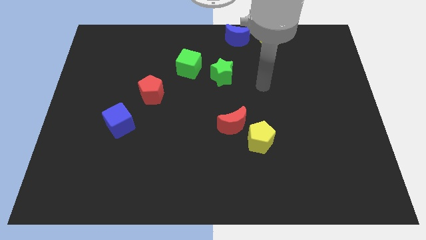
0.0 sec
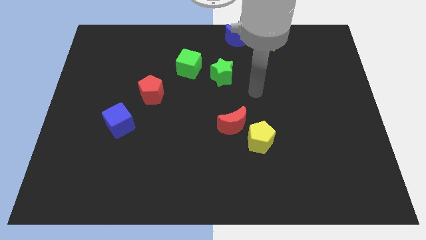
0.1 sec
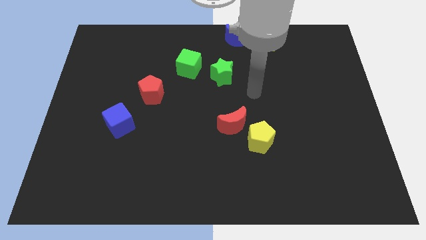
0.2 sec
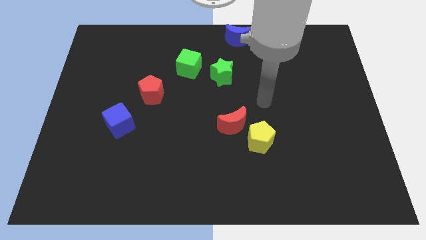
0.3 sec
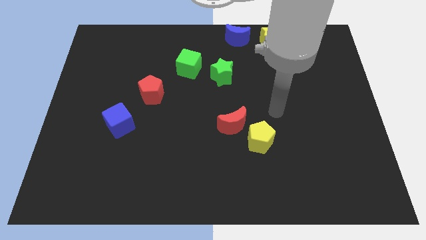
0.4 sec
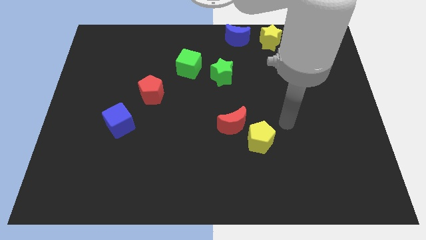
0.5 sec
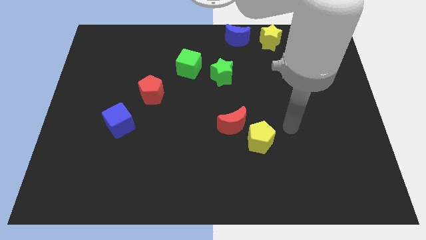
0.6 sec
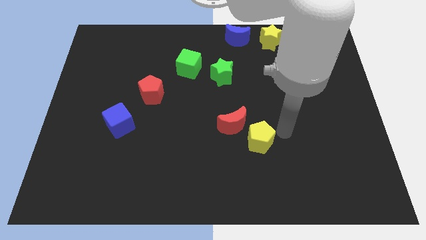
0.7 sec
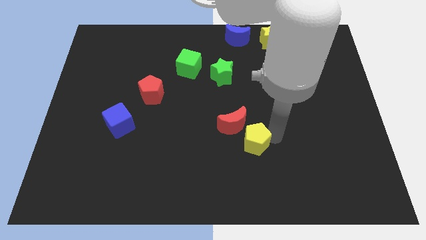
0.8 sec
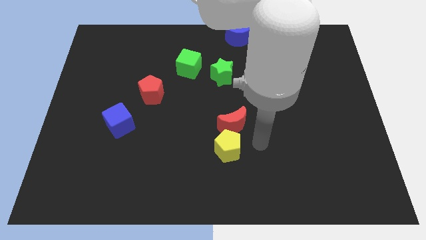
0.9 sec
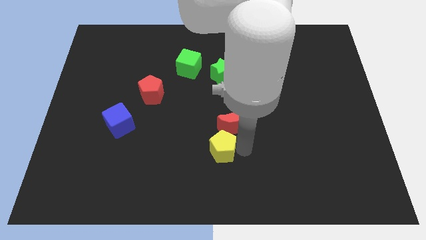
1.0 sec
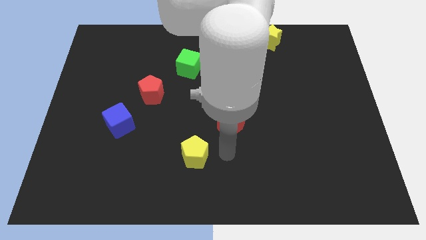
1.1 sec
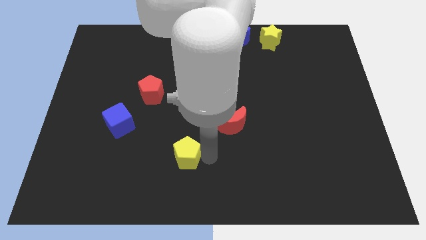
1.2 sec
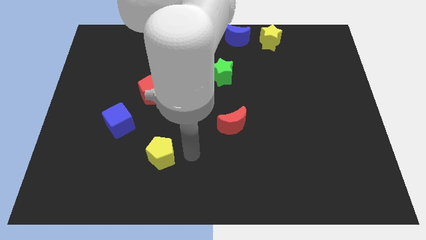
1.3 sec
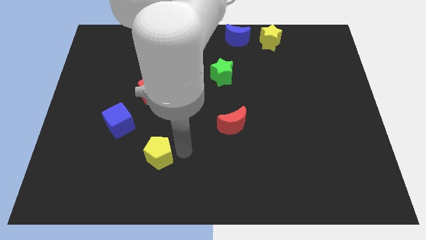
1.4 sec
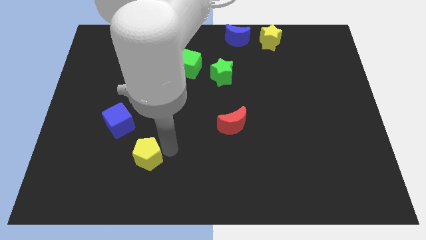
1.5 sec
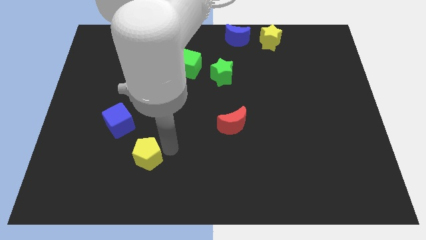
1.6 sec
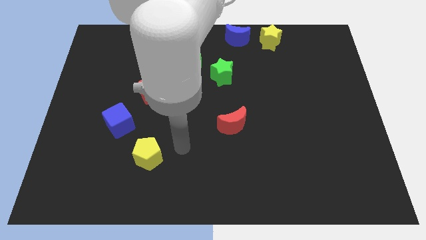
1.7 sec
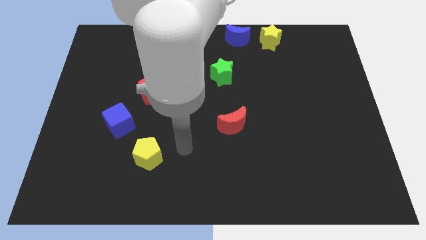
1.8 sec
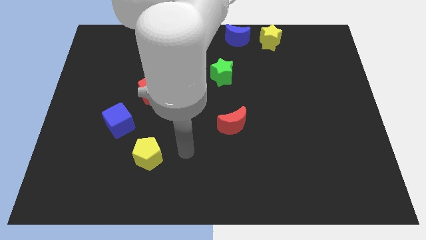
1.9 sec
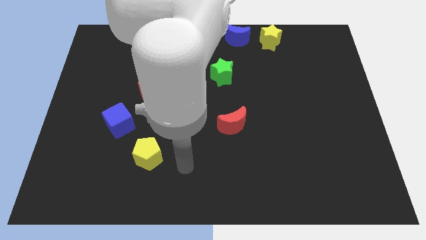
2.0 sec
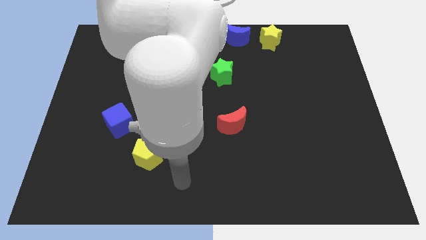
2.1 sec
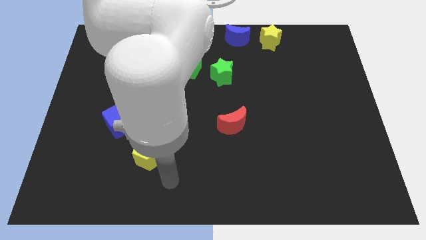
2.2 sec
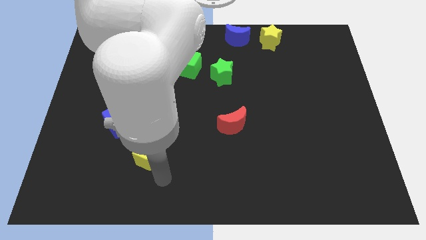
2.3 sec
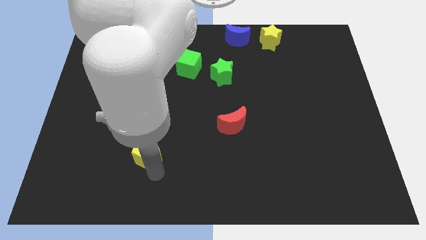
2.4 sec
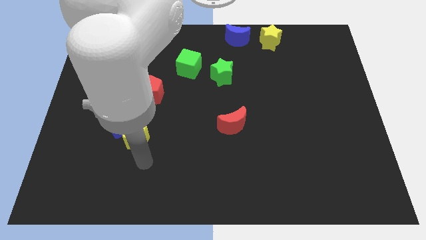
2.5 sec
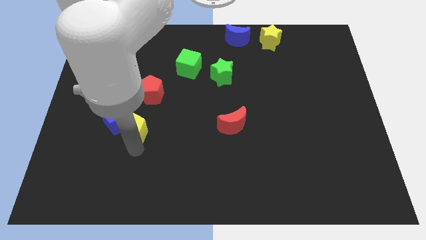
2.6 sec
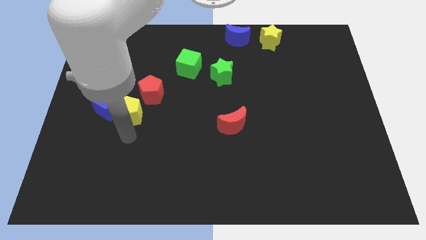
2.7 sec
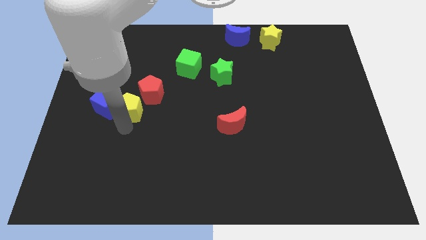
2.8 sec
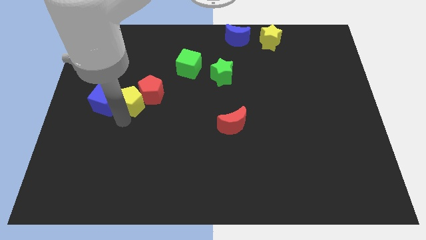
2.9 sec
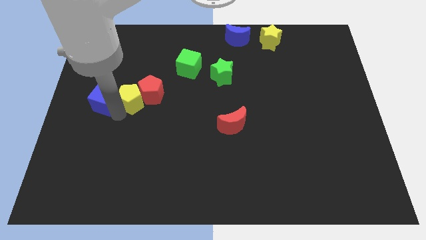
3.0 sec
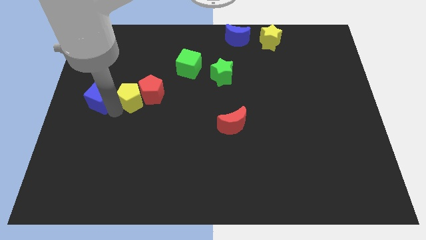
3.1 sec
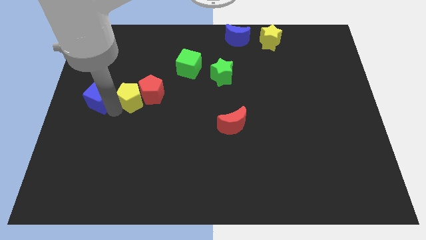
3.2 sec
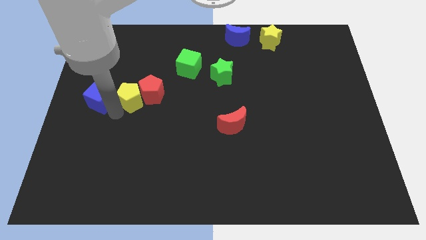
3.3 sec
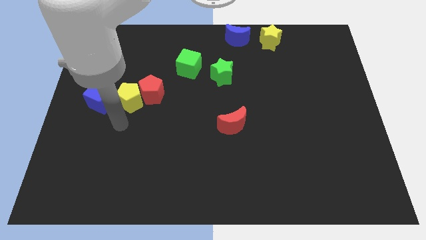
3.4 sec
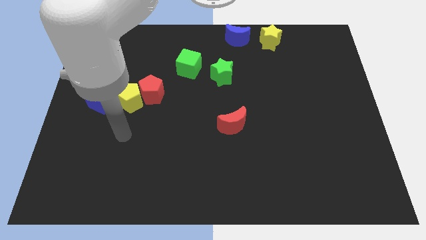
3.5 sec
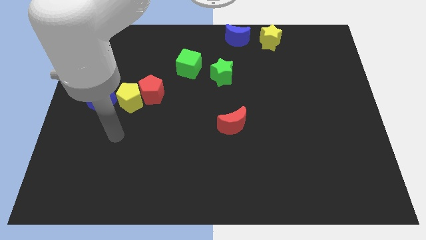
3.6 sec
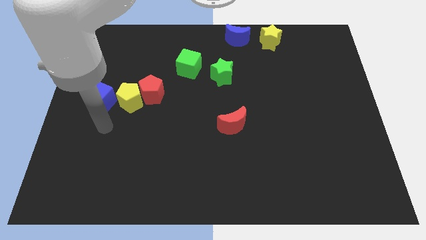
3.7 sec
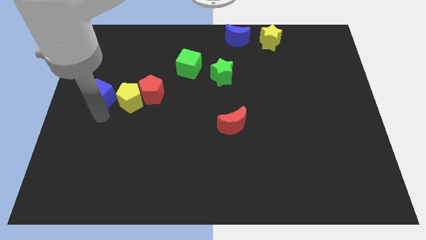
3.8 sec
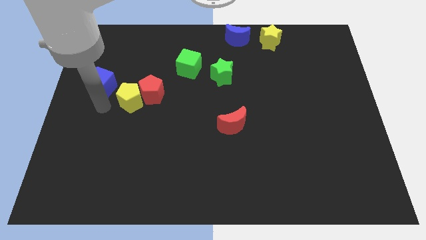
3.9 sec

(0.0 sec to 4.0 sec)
push the yellow pentagon into the blue cube

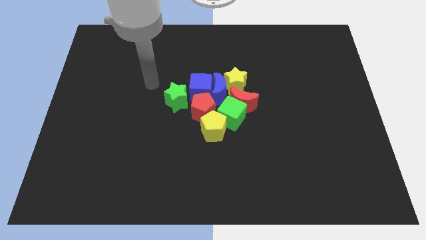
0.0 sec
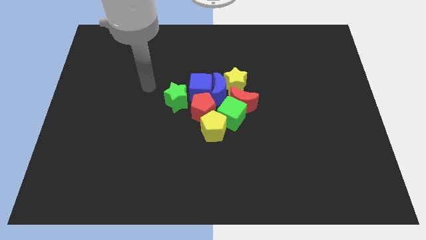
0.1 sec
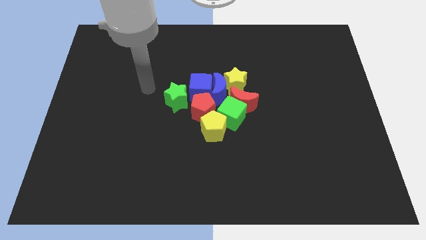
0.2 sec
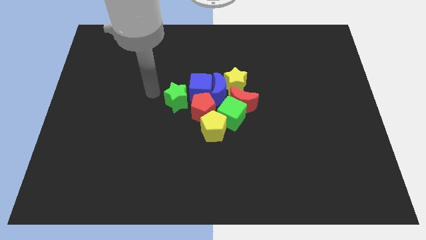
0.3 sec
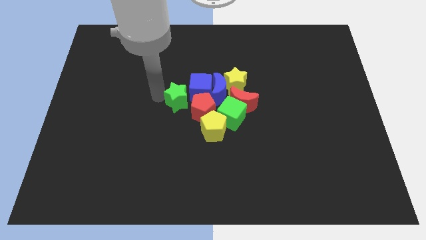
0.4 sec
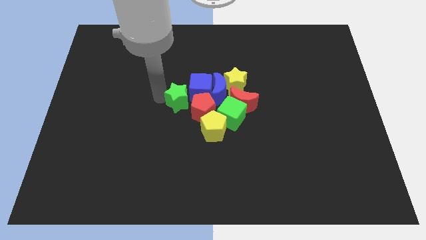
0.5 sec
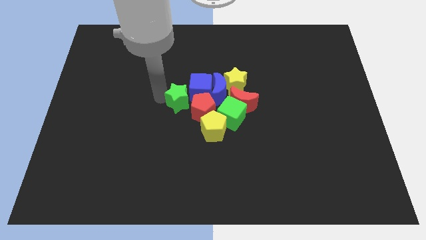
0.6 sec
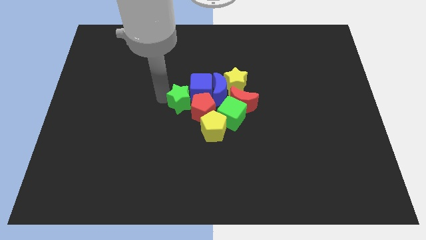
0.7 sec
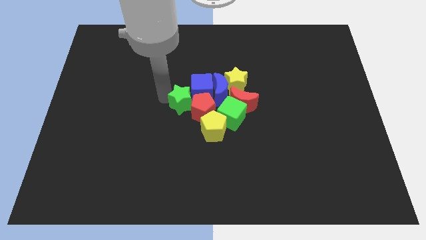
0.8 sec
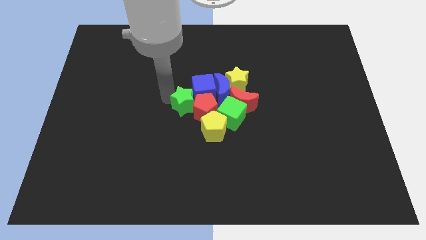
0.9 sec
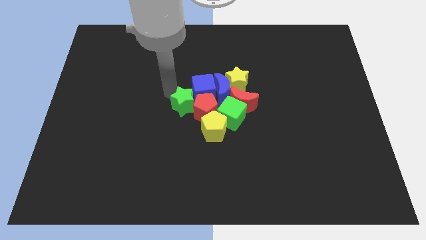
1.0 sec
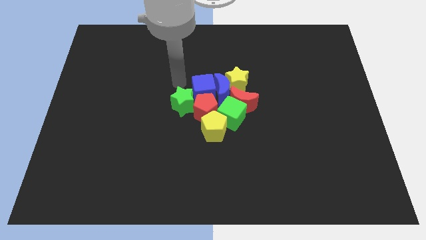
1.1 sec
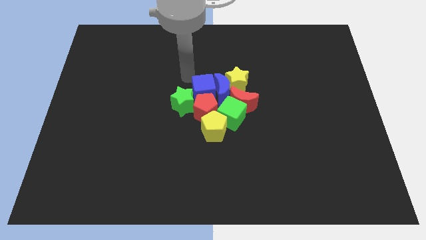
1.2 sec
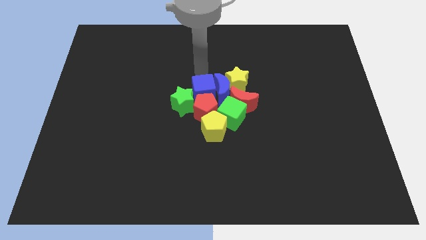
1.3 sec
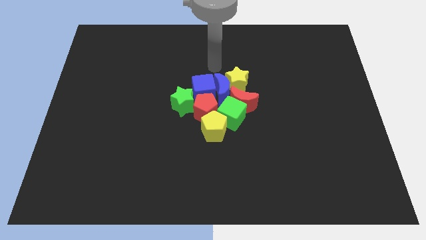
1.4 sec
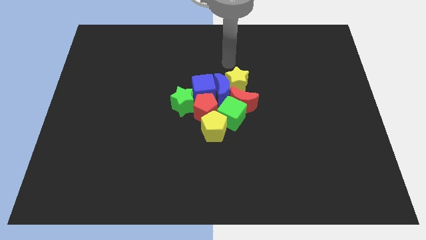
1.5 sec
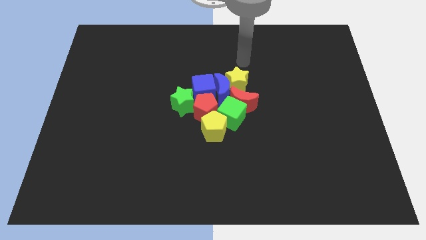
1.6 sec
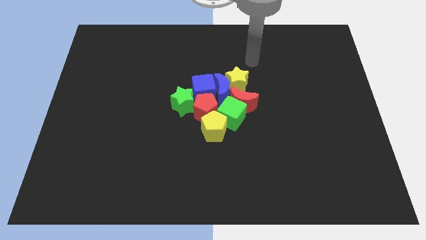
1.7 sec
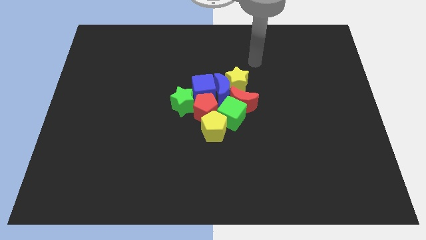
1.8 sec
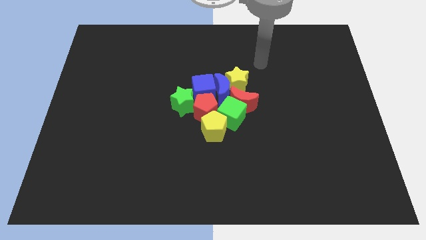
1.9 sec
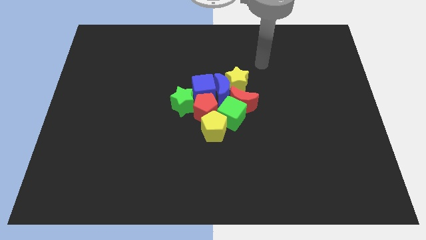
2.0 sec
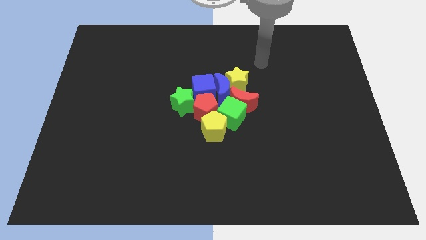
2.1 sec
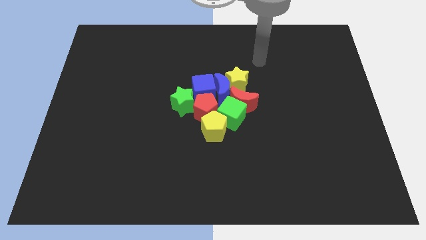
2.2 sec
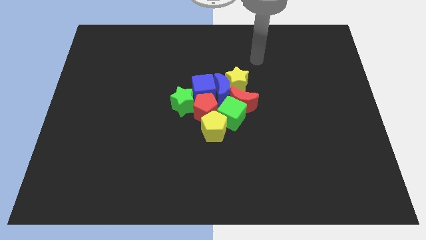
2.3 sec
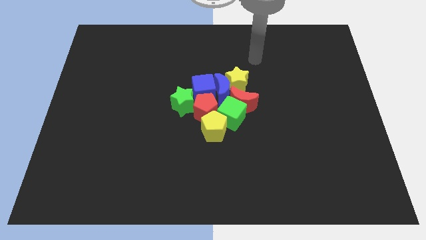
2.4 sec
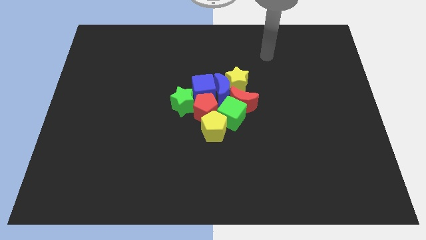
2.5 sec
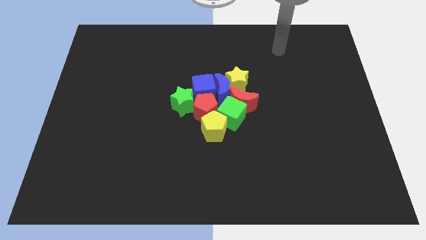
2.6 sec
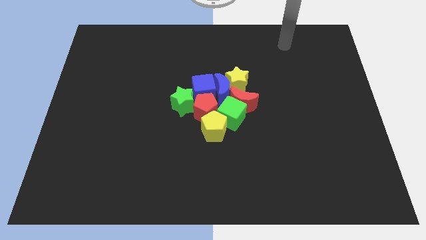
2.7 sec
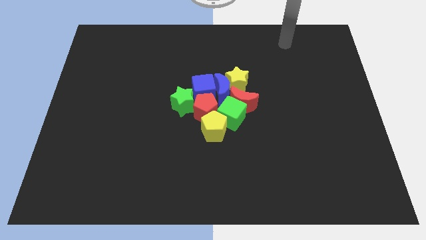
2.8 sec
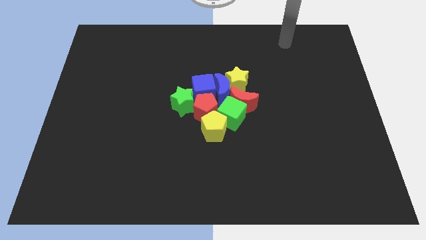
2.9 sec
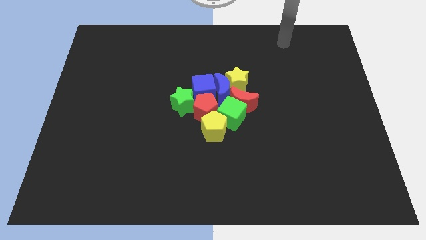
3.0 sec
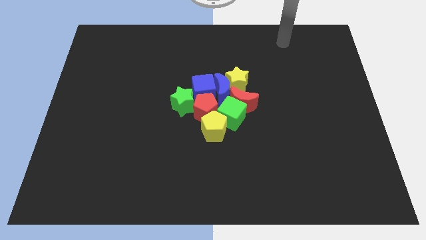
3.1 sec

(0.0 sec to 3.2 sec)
move your arm to the top right

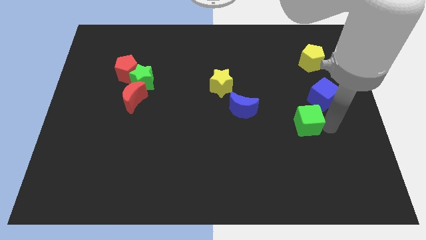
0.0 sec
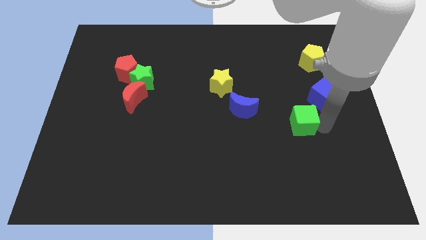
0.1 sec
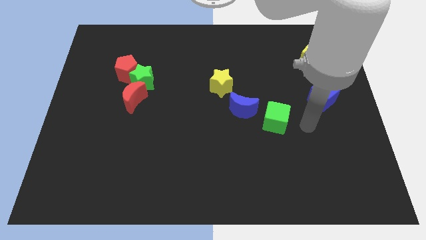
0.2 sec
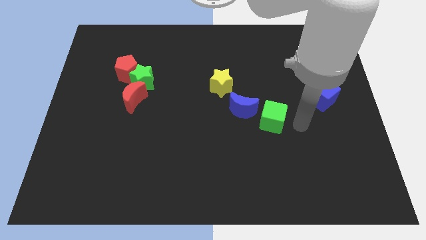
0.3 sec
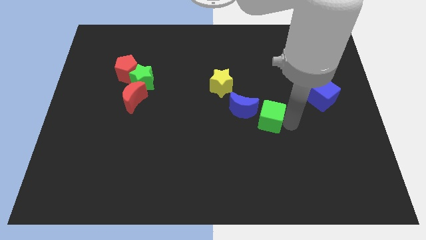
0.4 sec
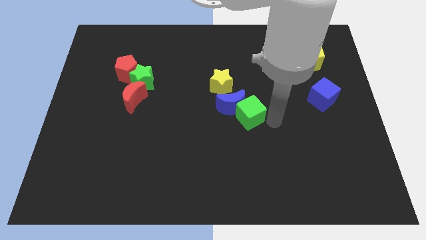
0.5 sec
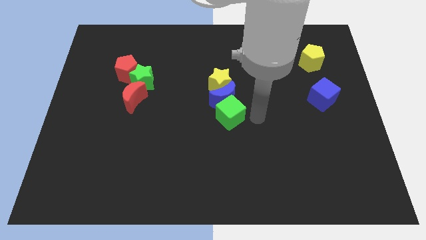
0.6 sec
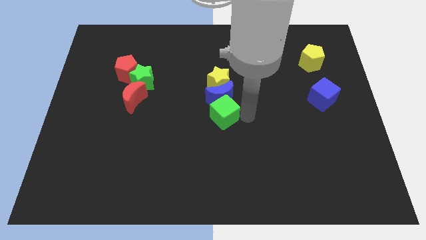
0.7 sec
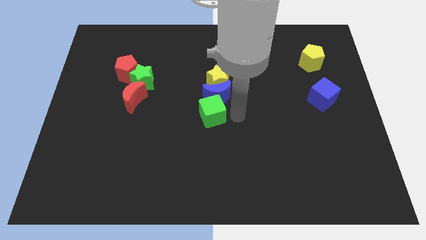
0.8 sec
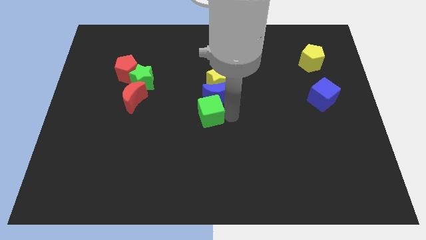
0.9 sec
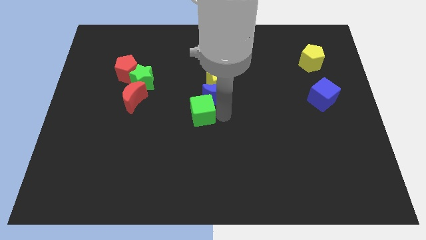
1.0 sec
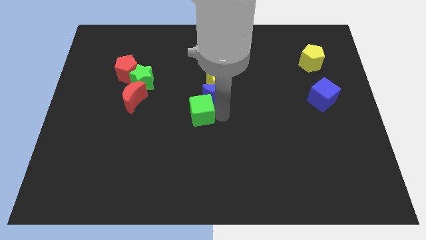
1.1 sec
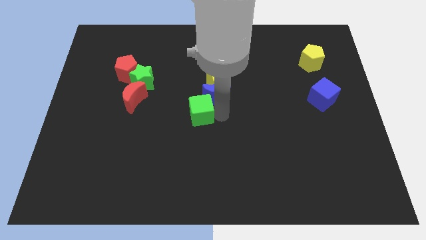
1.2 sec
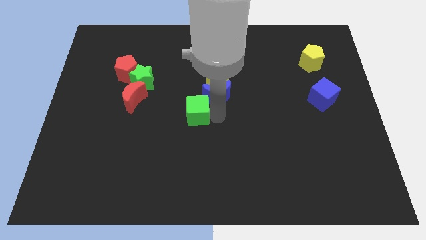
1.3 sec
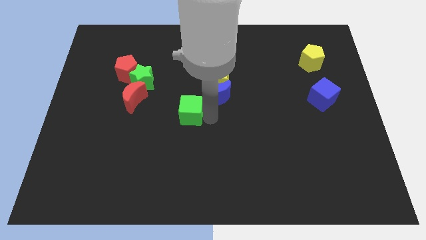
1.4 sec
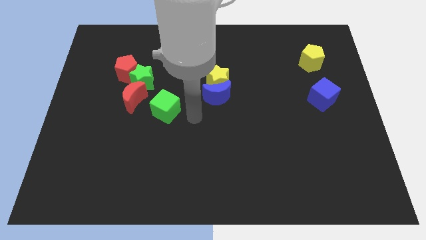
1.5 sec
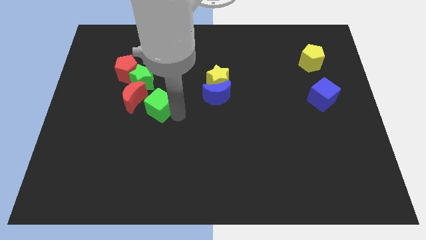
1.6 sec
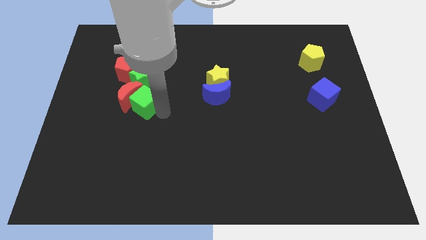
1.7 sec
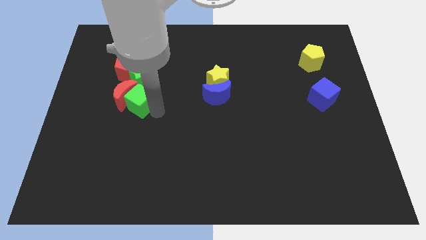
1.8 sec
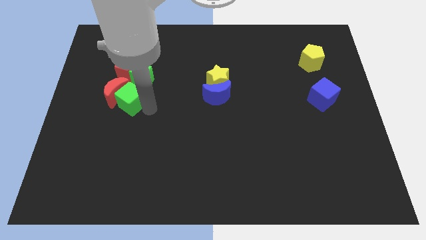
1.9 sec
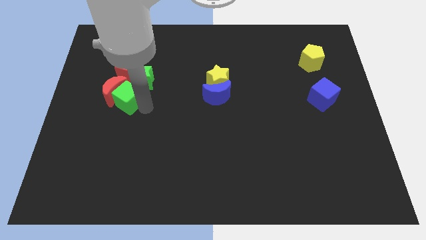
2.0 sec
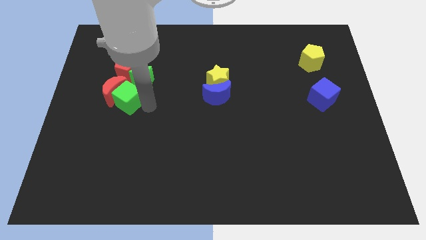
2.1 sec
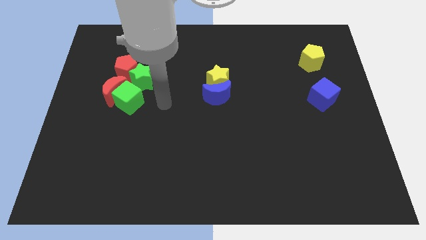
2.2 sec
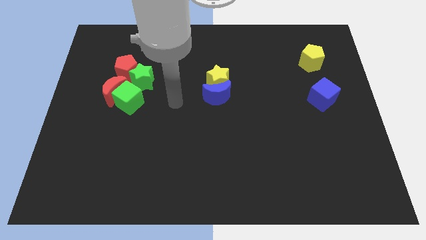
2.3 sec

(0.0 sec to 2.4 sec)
push the green cube to the bottom side of the red crescent
